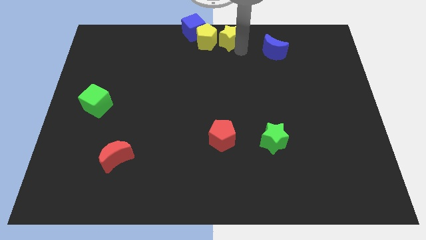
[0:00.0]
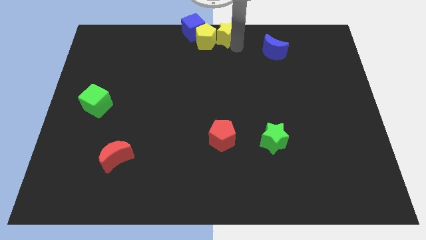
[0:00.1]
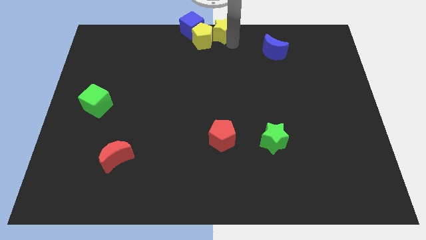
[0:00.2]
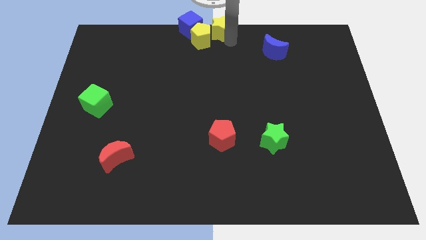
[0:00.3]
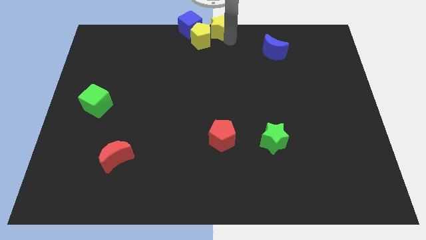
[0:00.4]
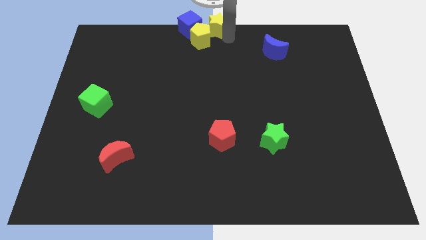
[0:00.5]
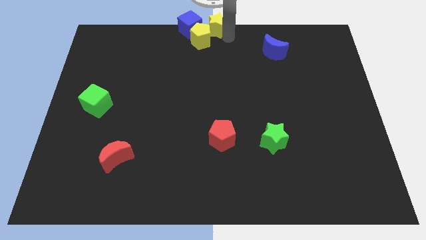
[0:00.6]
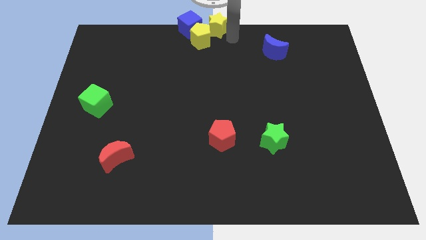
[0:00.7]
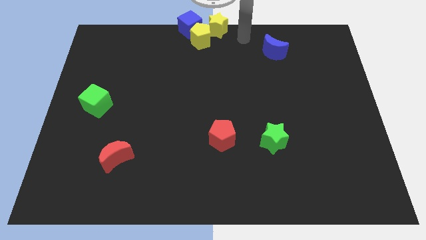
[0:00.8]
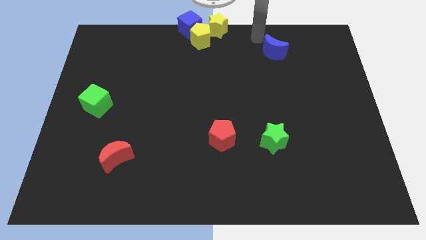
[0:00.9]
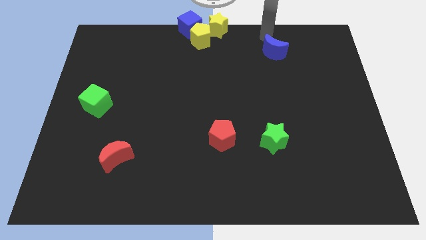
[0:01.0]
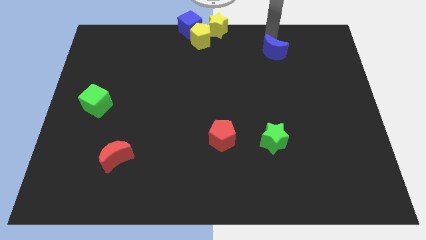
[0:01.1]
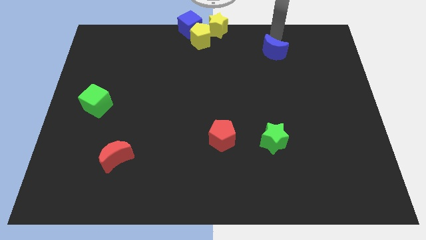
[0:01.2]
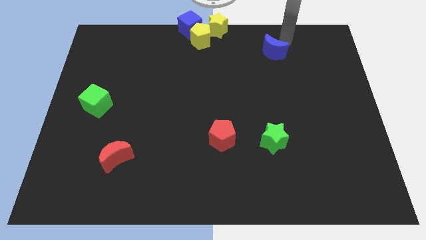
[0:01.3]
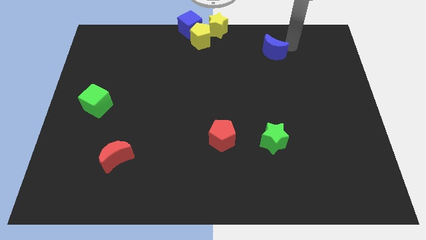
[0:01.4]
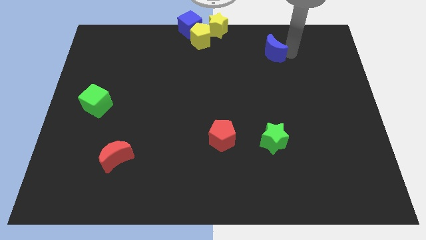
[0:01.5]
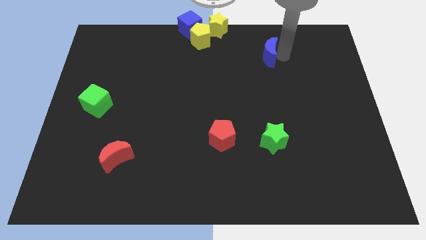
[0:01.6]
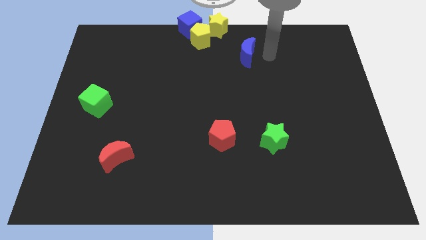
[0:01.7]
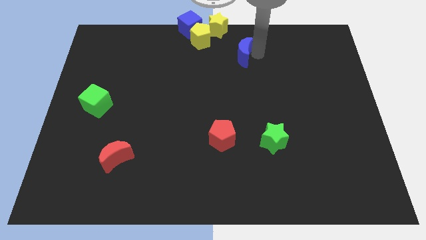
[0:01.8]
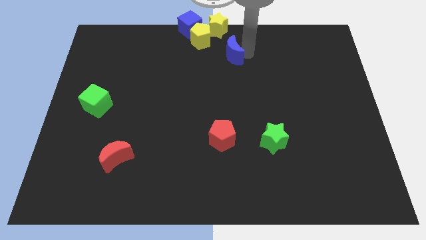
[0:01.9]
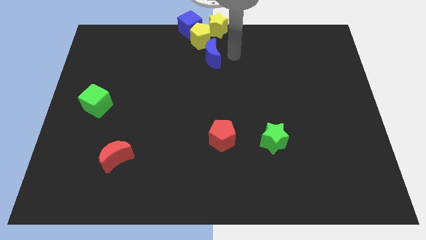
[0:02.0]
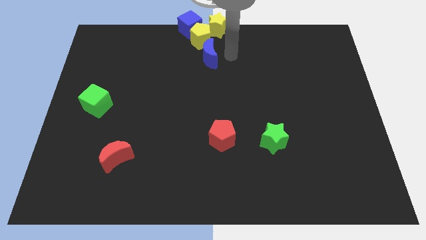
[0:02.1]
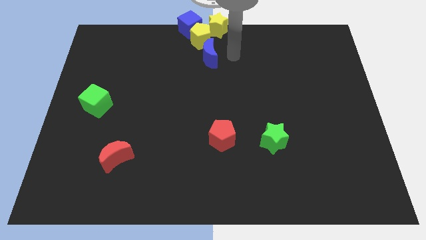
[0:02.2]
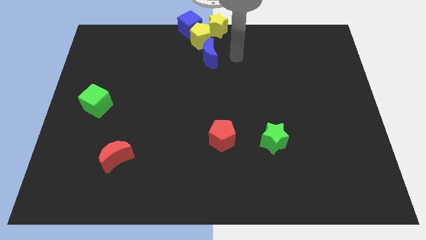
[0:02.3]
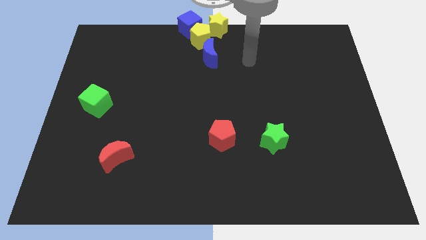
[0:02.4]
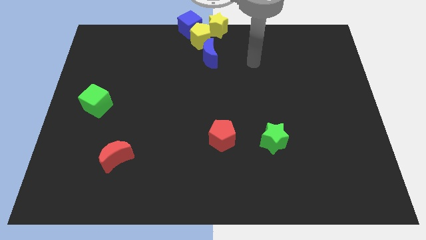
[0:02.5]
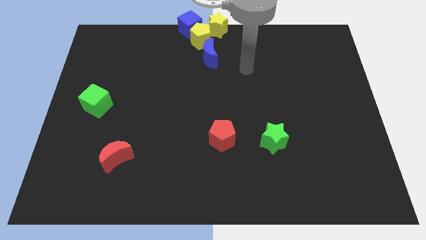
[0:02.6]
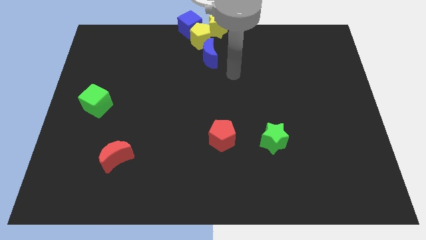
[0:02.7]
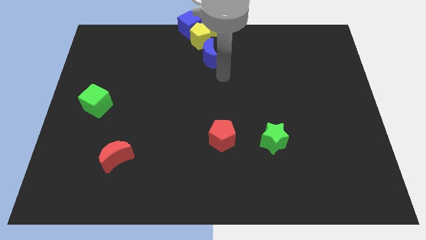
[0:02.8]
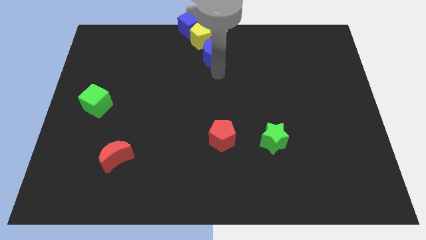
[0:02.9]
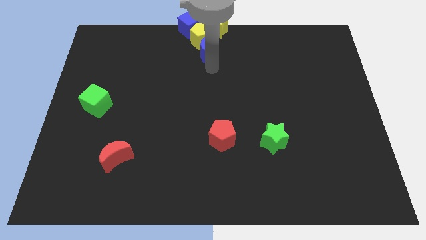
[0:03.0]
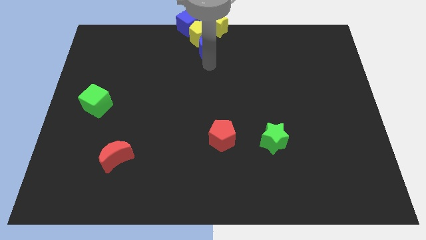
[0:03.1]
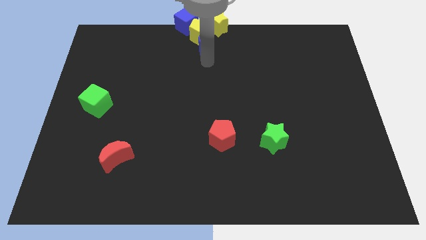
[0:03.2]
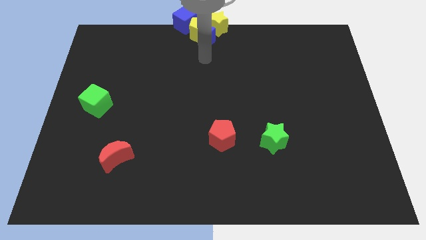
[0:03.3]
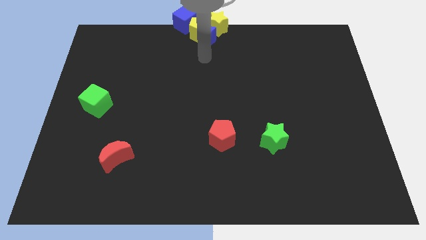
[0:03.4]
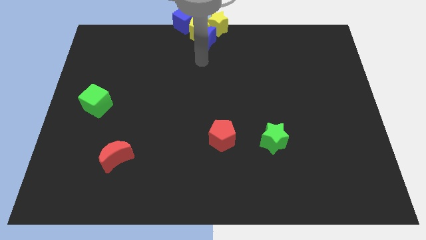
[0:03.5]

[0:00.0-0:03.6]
move blue crescent into the yellow pentagon

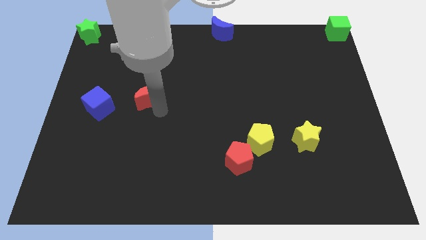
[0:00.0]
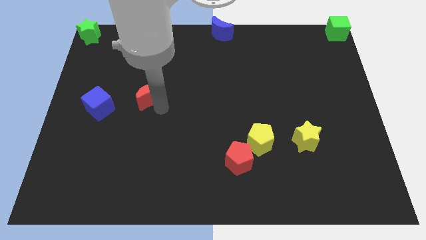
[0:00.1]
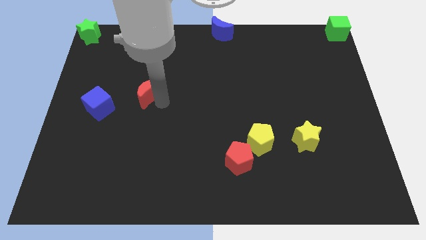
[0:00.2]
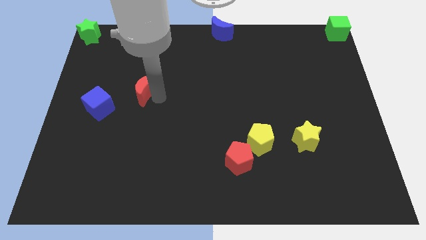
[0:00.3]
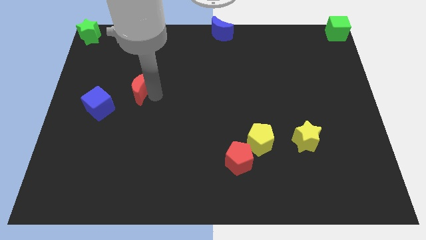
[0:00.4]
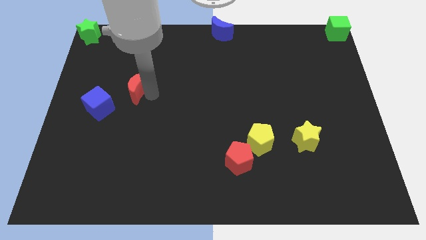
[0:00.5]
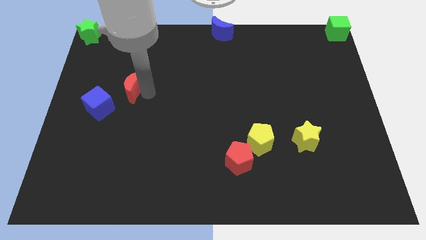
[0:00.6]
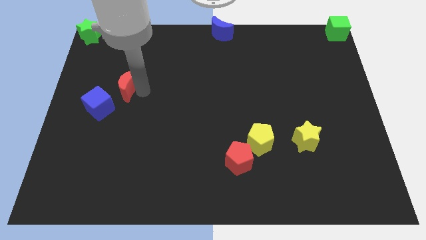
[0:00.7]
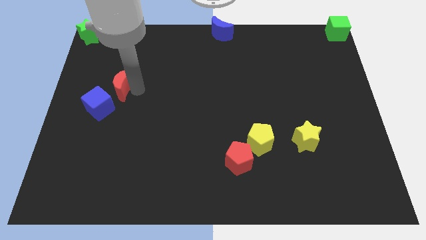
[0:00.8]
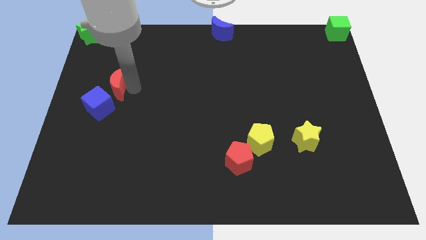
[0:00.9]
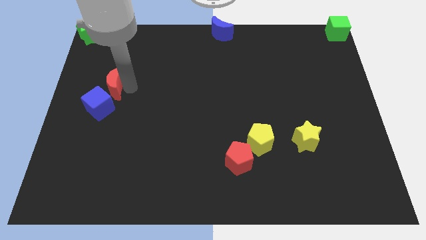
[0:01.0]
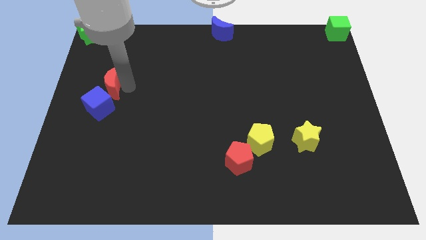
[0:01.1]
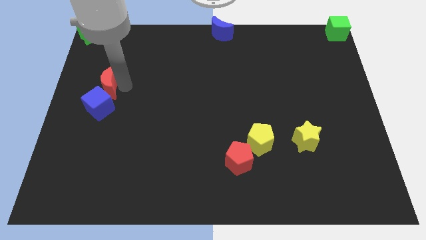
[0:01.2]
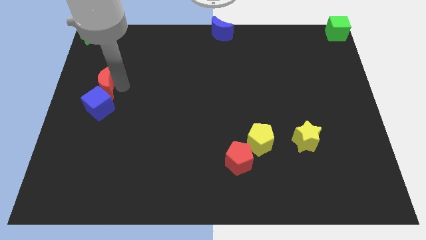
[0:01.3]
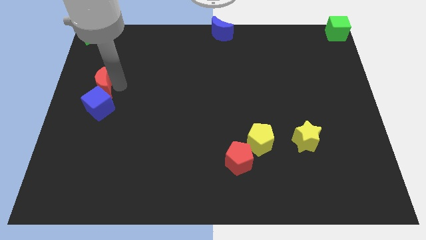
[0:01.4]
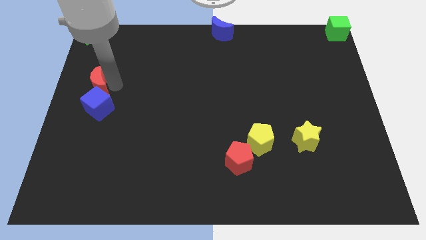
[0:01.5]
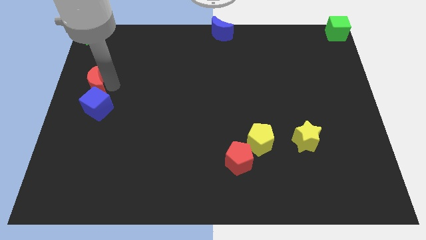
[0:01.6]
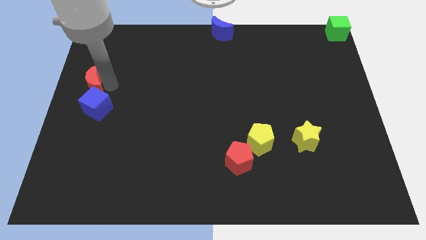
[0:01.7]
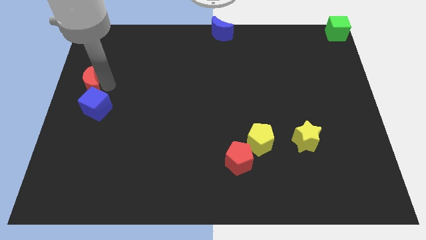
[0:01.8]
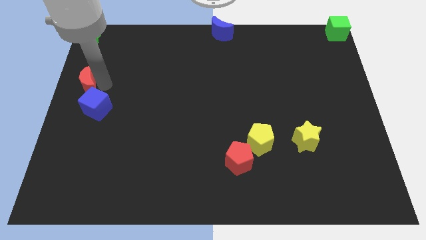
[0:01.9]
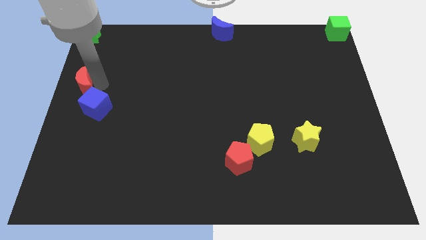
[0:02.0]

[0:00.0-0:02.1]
push red moon into blue cube

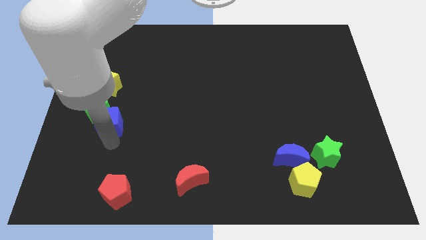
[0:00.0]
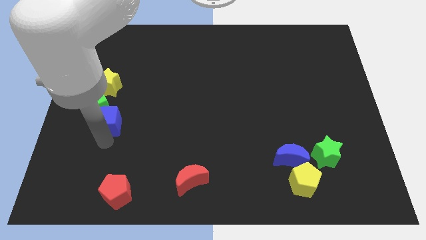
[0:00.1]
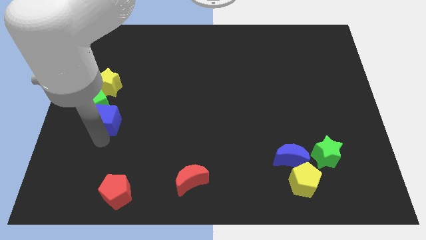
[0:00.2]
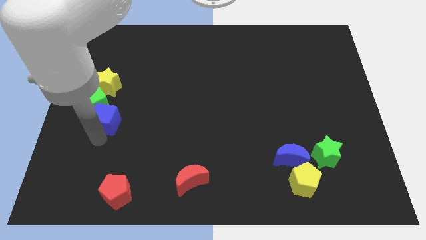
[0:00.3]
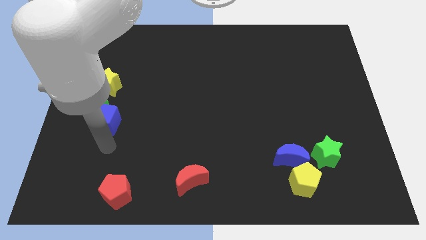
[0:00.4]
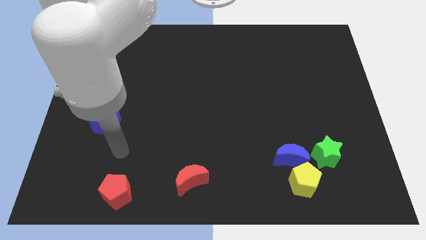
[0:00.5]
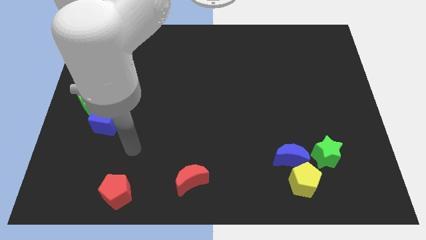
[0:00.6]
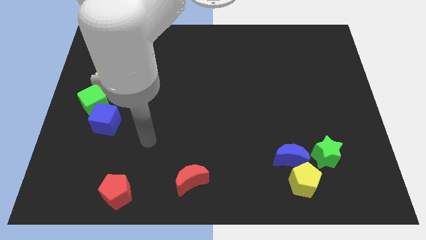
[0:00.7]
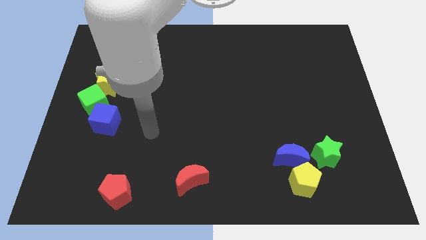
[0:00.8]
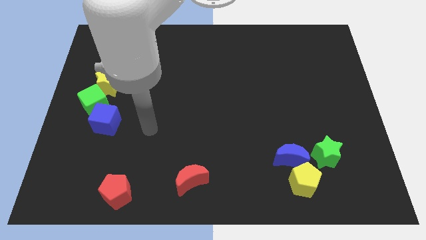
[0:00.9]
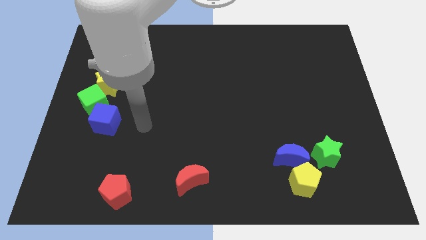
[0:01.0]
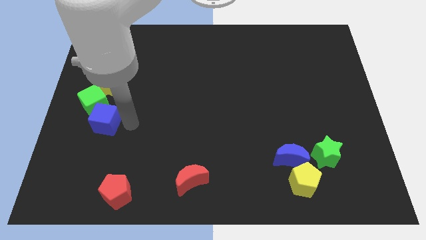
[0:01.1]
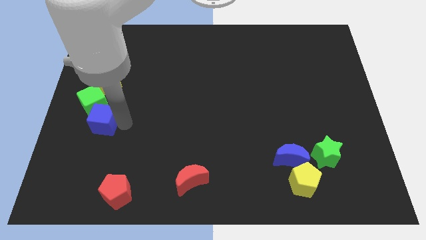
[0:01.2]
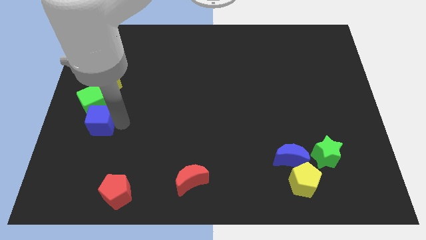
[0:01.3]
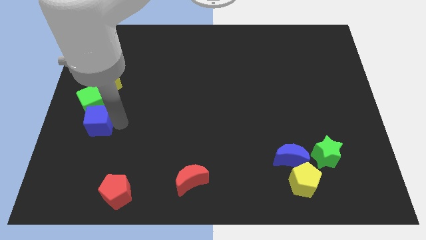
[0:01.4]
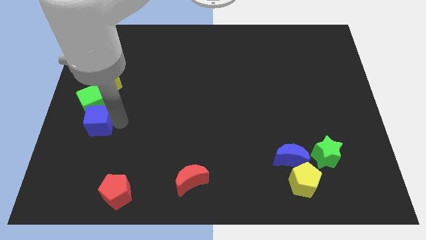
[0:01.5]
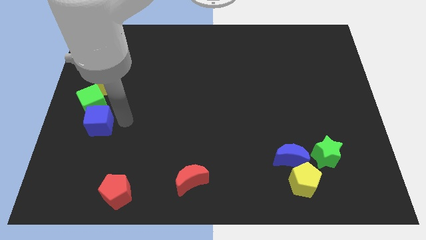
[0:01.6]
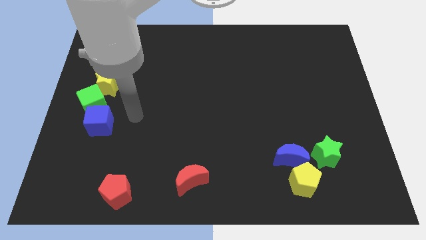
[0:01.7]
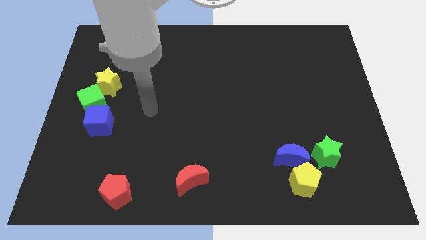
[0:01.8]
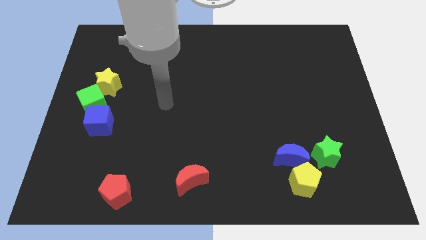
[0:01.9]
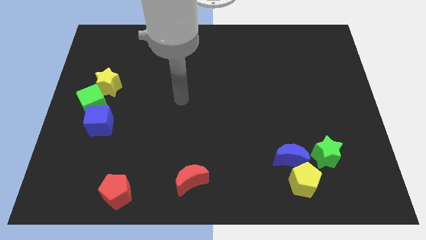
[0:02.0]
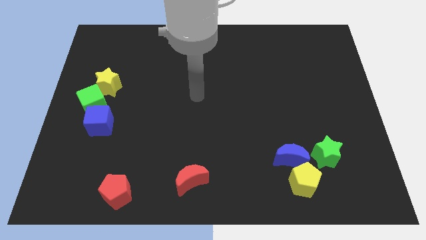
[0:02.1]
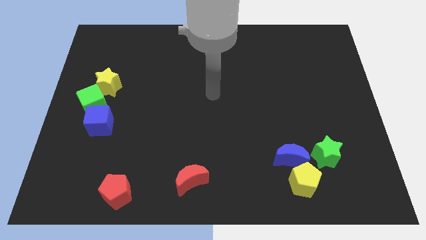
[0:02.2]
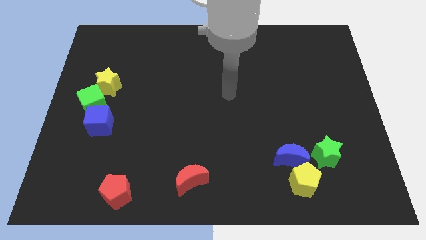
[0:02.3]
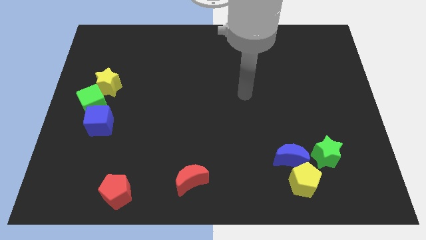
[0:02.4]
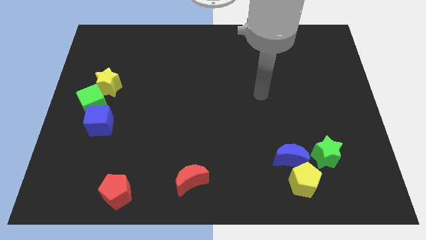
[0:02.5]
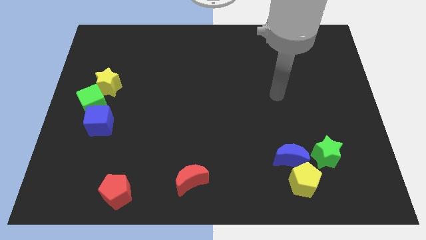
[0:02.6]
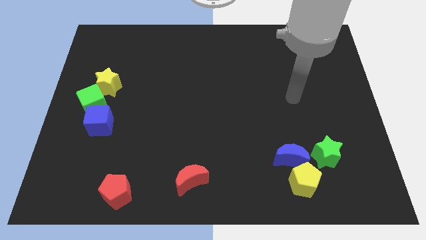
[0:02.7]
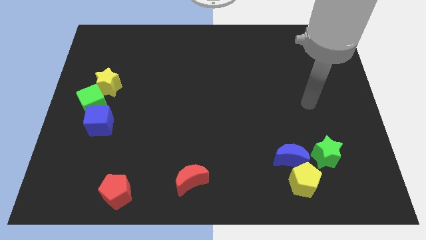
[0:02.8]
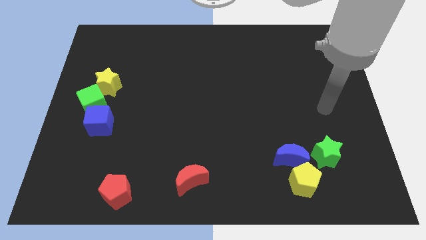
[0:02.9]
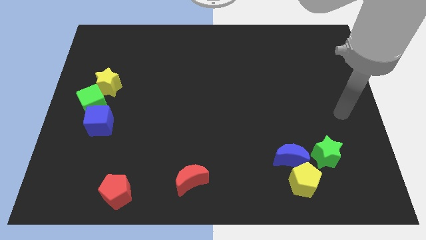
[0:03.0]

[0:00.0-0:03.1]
move your arm away from the objects

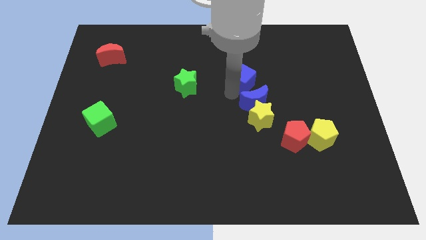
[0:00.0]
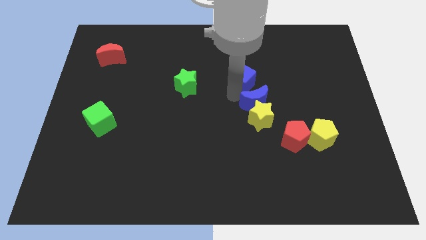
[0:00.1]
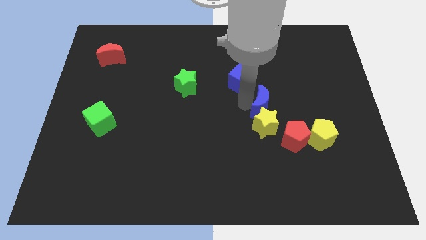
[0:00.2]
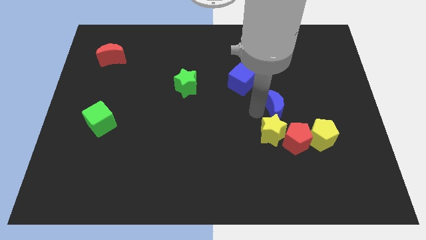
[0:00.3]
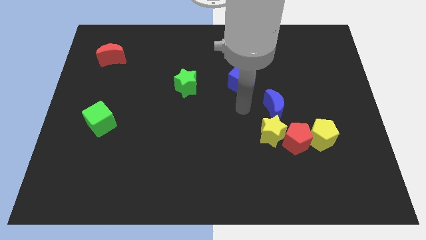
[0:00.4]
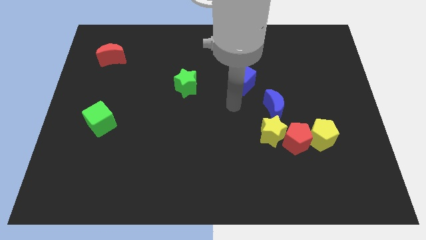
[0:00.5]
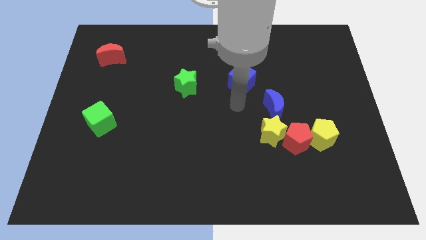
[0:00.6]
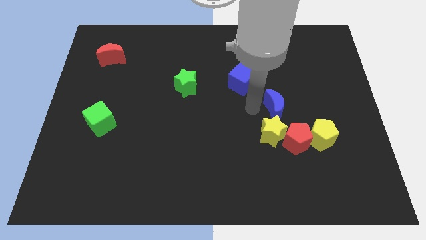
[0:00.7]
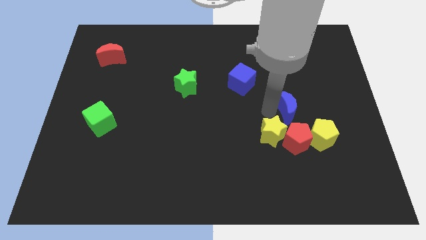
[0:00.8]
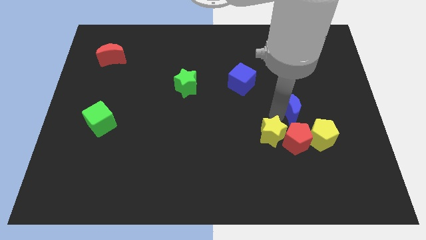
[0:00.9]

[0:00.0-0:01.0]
place blue moon to the top of red pentagon
